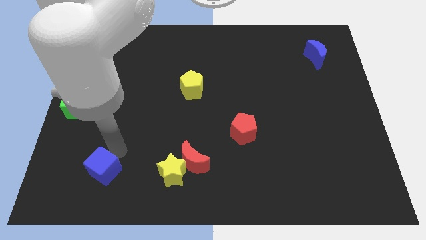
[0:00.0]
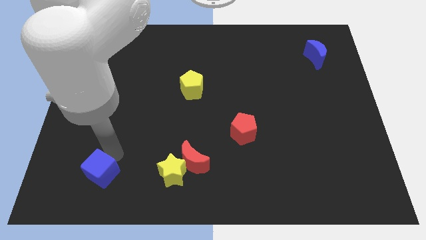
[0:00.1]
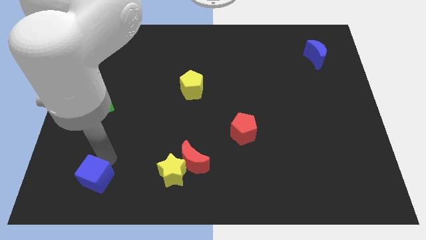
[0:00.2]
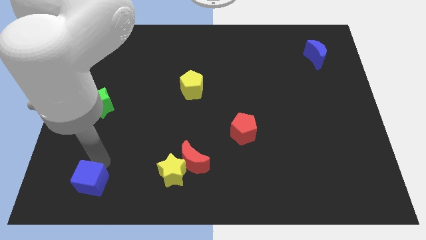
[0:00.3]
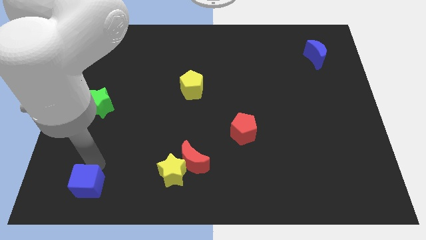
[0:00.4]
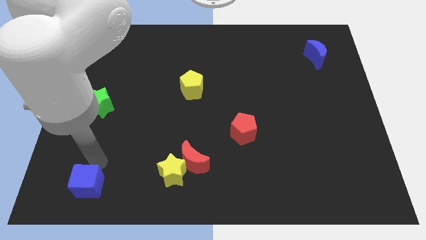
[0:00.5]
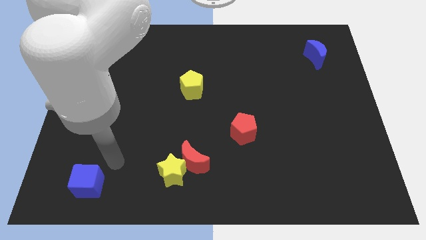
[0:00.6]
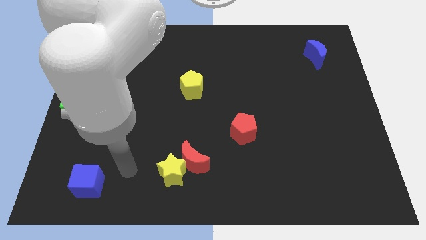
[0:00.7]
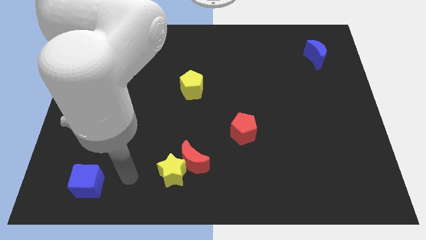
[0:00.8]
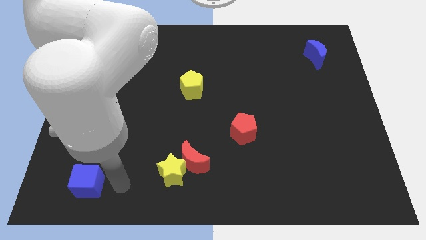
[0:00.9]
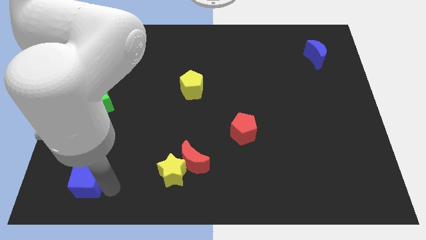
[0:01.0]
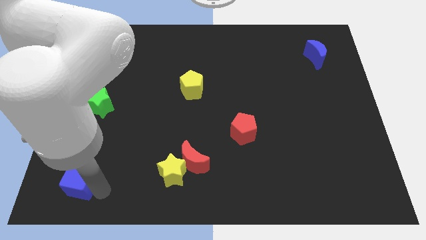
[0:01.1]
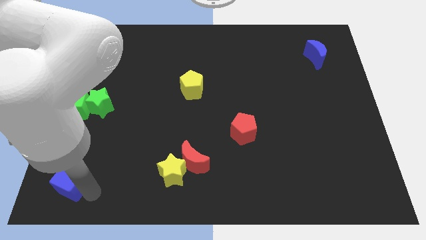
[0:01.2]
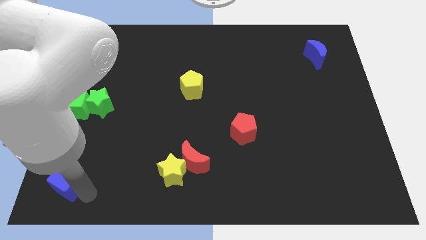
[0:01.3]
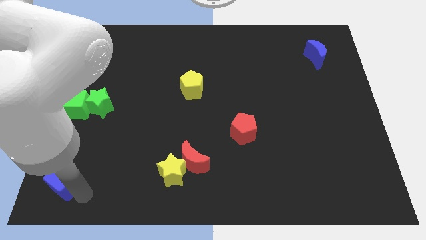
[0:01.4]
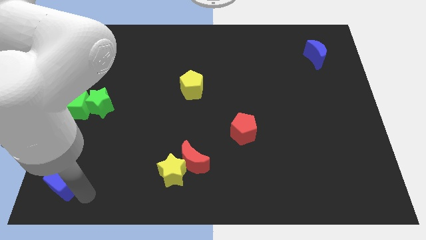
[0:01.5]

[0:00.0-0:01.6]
push the blue cube towards the bottom left

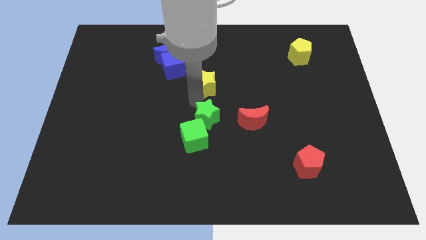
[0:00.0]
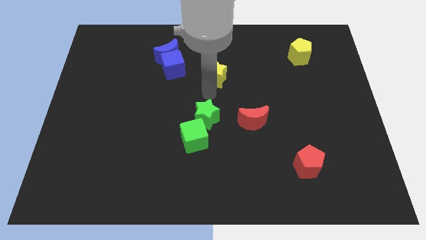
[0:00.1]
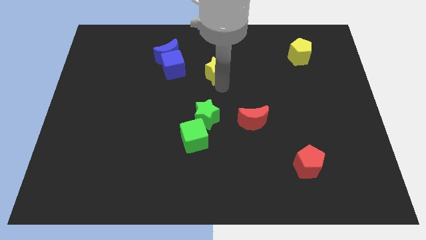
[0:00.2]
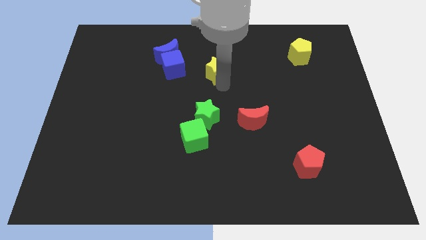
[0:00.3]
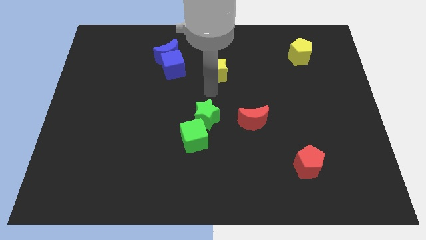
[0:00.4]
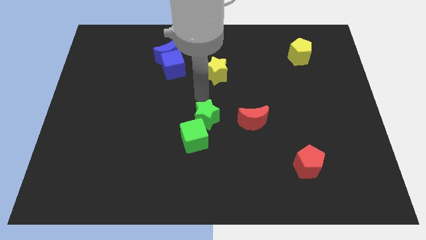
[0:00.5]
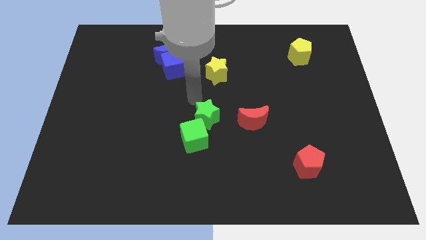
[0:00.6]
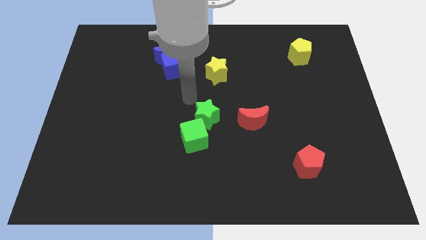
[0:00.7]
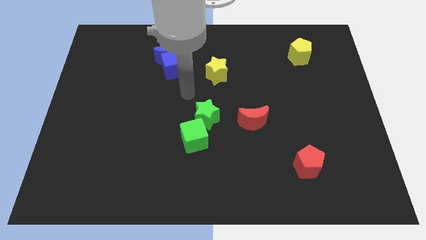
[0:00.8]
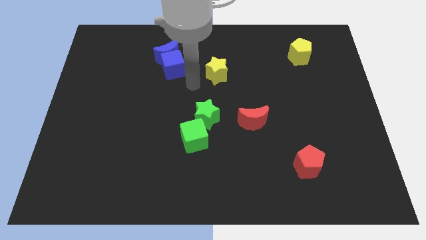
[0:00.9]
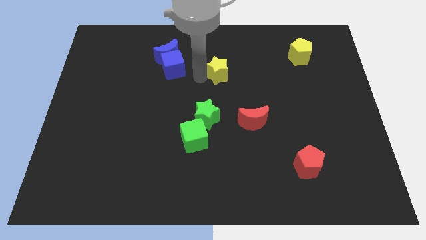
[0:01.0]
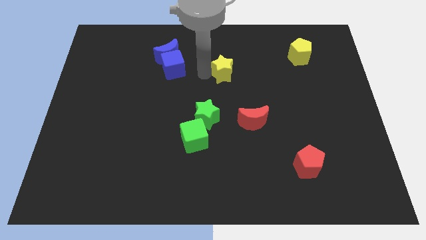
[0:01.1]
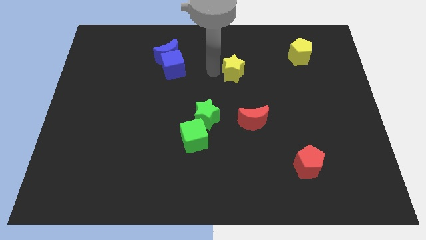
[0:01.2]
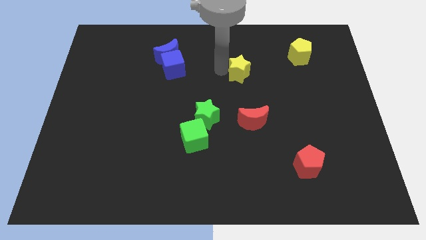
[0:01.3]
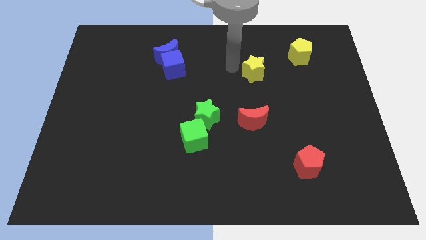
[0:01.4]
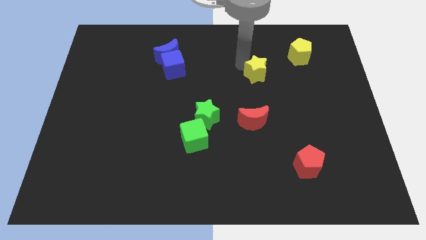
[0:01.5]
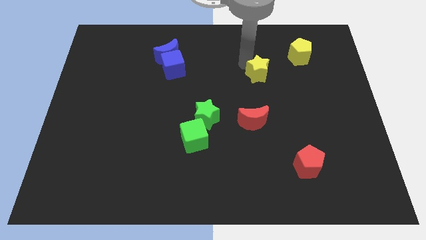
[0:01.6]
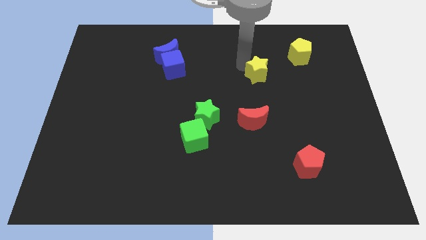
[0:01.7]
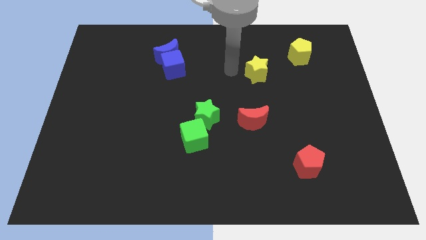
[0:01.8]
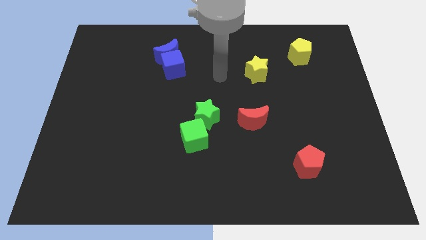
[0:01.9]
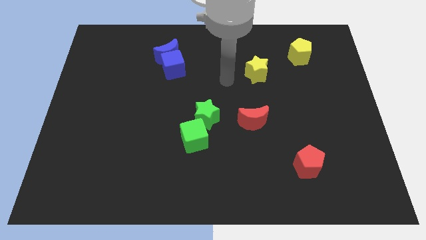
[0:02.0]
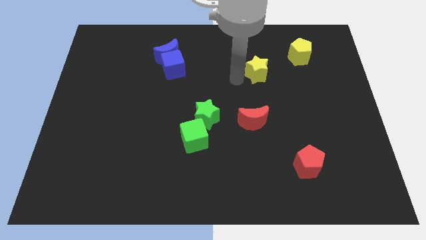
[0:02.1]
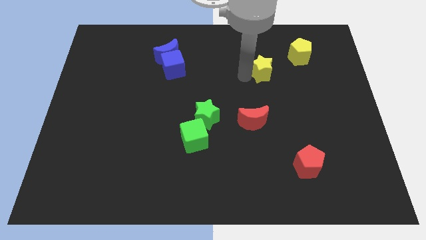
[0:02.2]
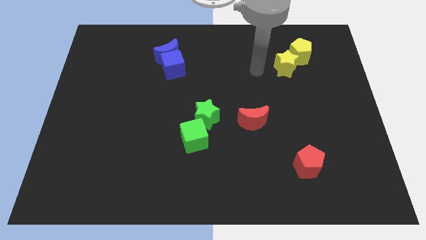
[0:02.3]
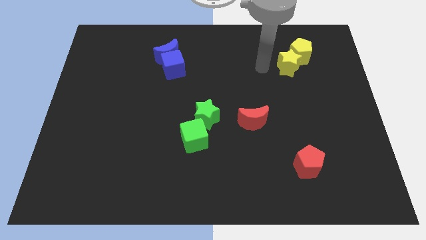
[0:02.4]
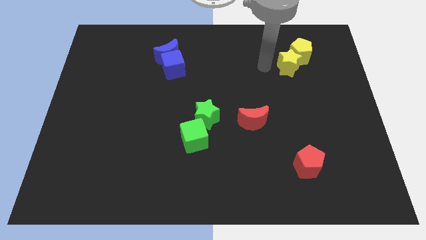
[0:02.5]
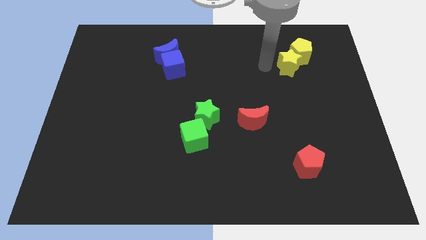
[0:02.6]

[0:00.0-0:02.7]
push the yellow star into the yellow pentagon

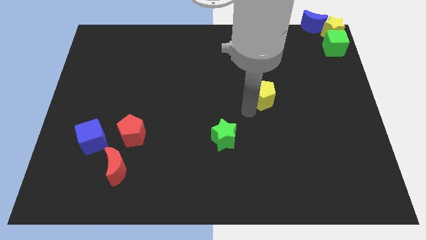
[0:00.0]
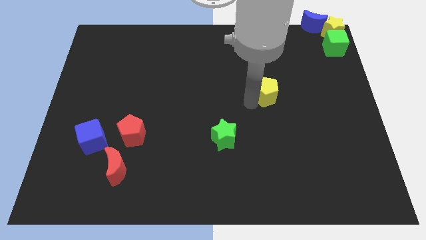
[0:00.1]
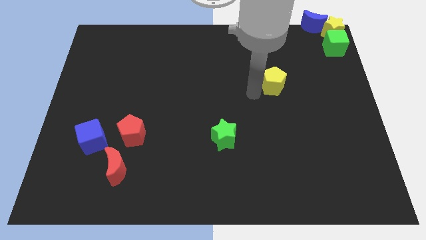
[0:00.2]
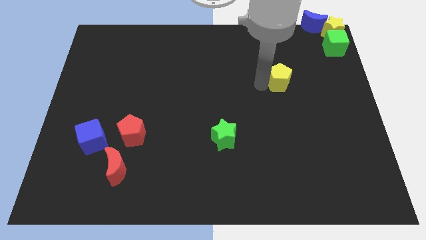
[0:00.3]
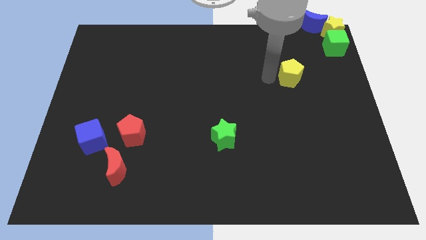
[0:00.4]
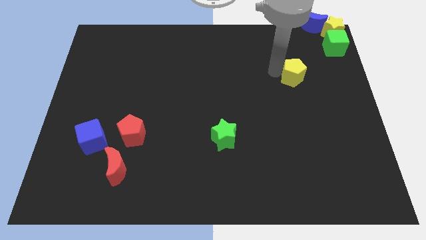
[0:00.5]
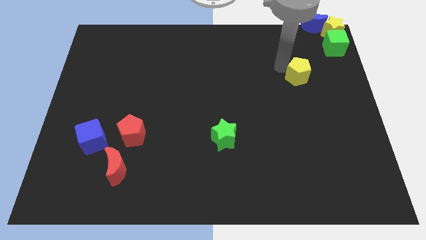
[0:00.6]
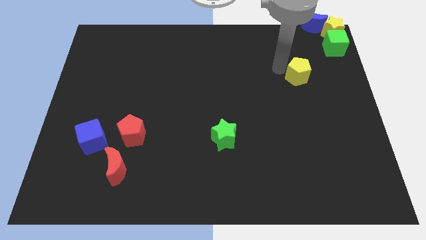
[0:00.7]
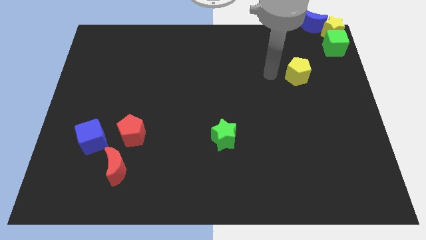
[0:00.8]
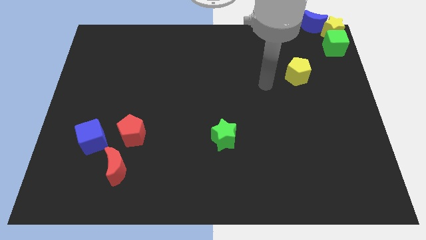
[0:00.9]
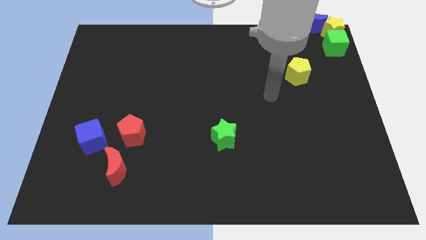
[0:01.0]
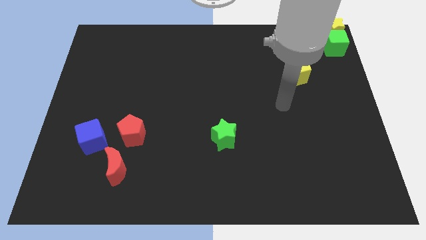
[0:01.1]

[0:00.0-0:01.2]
put the yellow pentagon diagonally to green cube

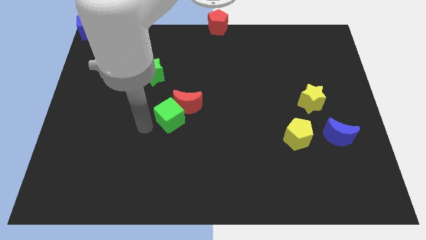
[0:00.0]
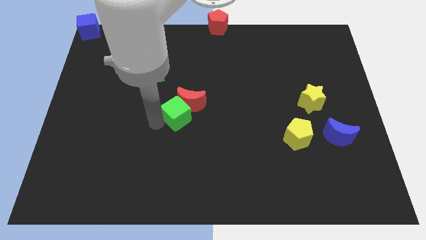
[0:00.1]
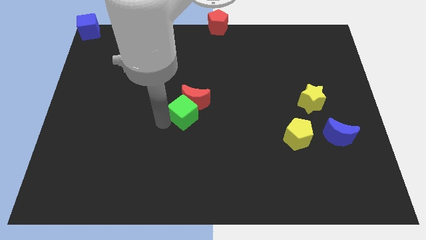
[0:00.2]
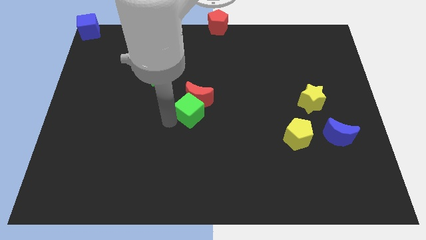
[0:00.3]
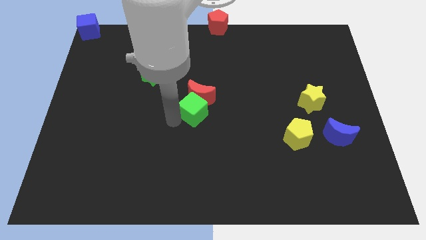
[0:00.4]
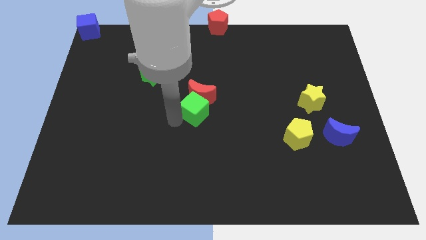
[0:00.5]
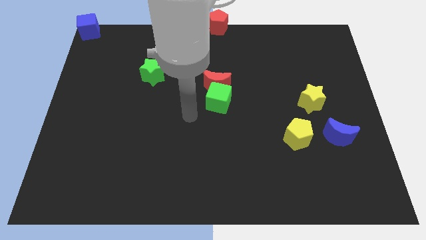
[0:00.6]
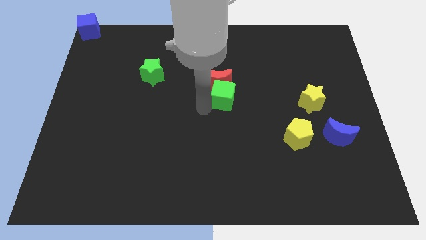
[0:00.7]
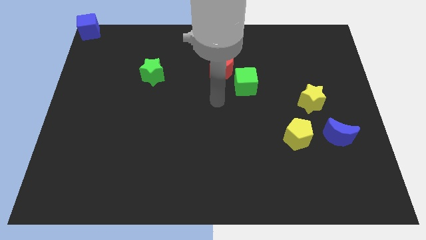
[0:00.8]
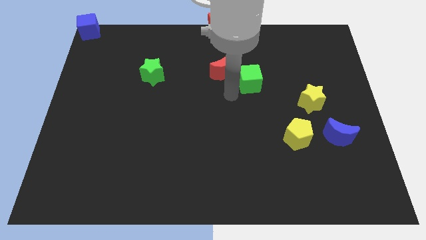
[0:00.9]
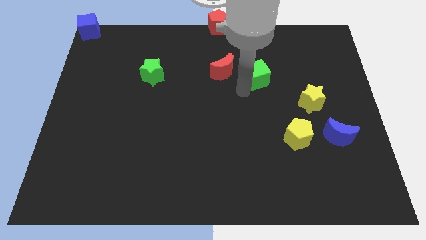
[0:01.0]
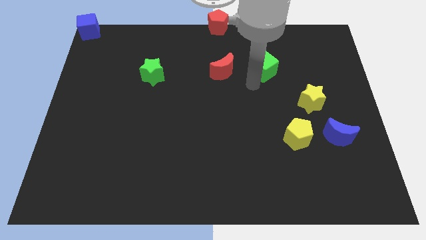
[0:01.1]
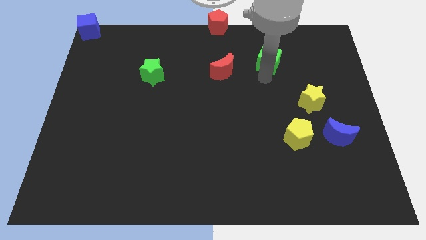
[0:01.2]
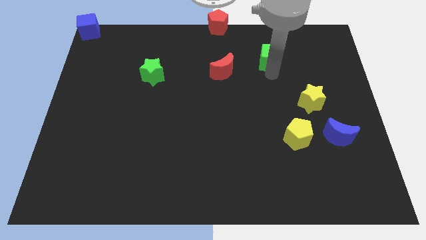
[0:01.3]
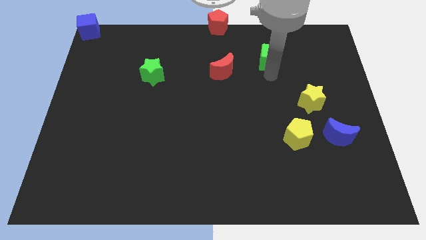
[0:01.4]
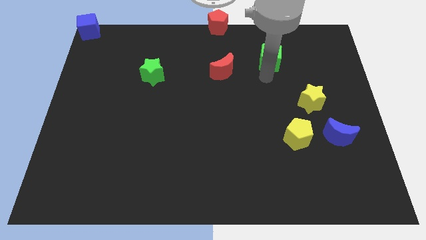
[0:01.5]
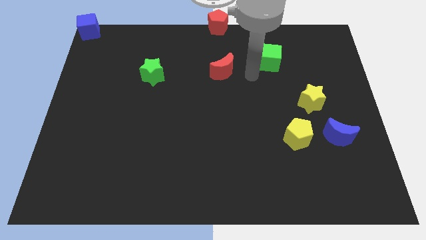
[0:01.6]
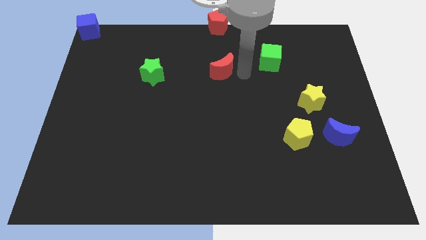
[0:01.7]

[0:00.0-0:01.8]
separate the green cube from the red moon

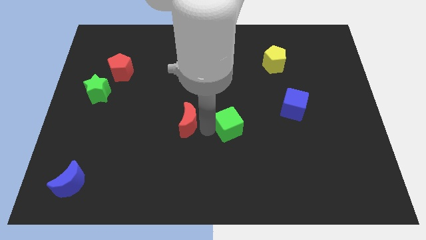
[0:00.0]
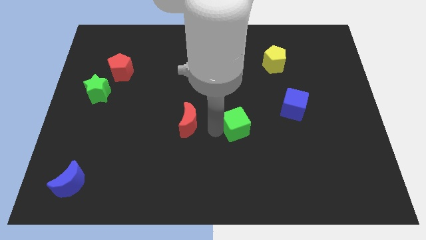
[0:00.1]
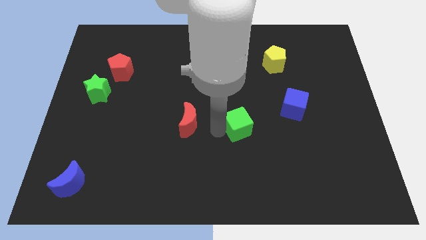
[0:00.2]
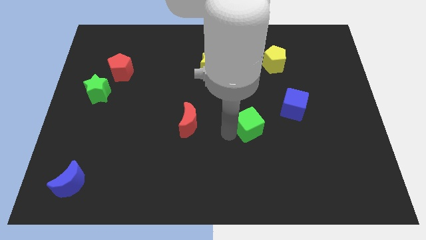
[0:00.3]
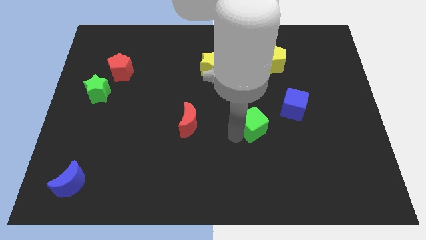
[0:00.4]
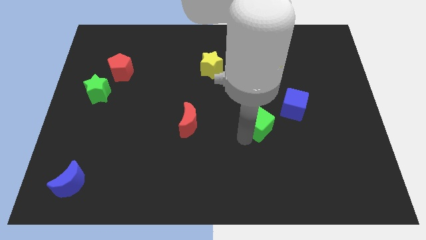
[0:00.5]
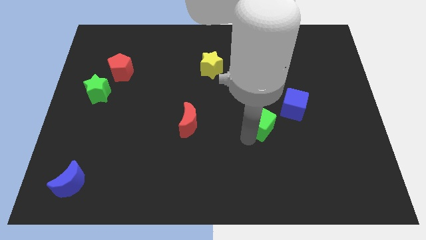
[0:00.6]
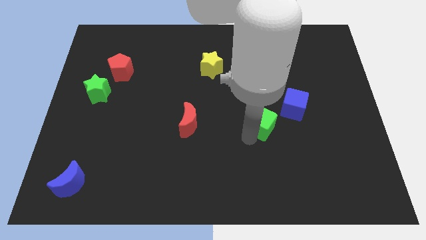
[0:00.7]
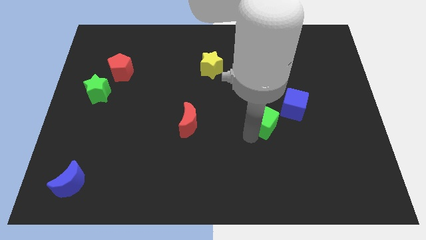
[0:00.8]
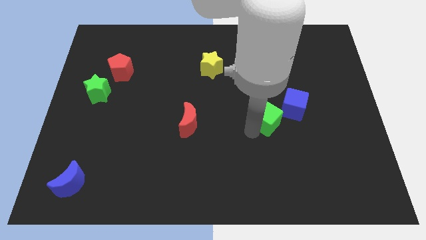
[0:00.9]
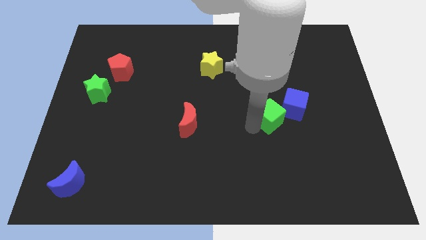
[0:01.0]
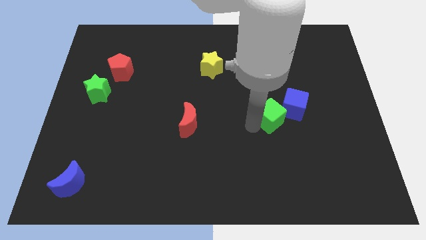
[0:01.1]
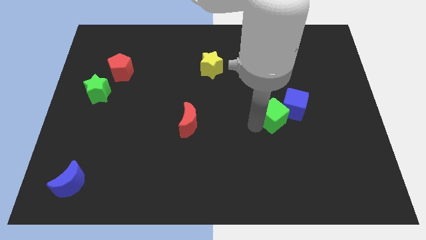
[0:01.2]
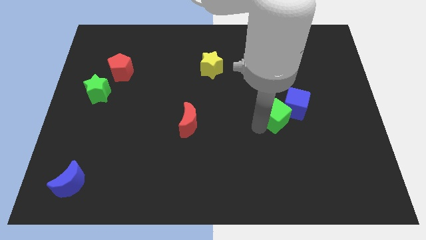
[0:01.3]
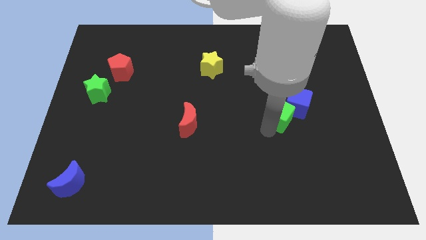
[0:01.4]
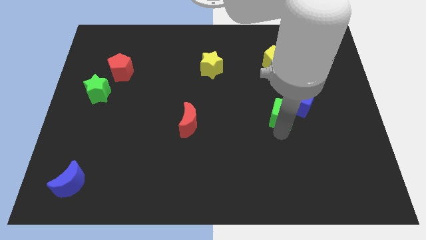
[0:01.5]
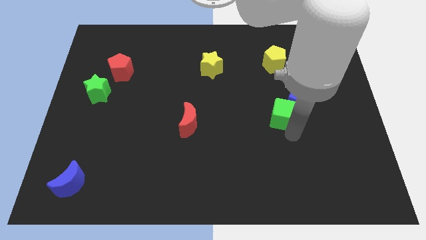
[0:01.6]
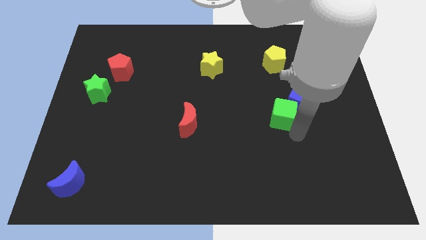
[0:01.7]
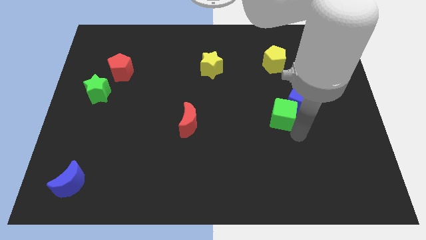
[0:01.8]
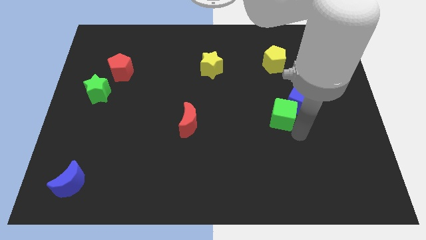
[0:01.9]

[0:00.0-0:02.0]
push the green cube into the blue cube
